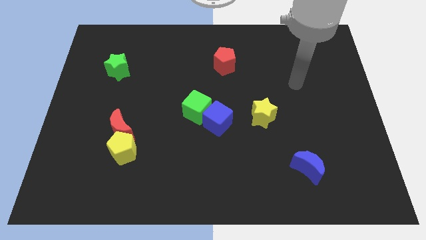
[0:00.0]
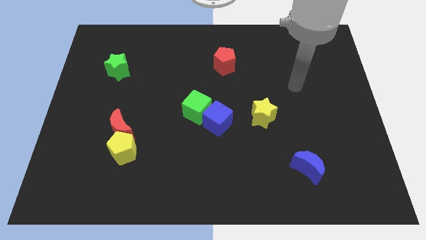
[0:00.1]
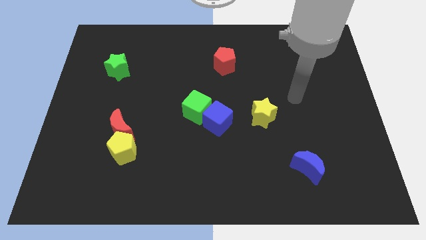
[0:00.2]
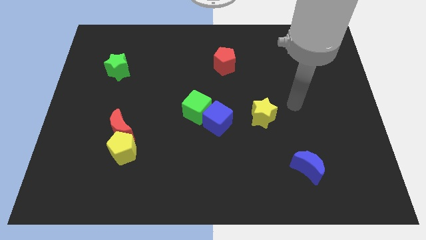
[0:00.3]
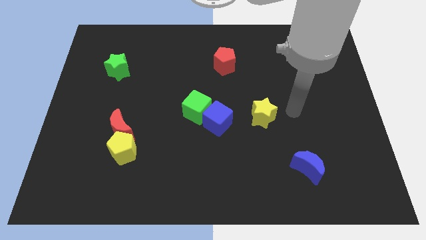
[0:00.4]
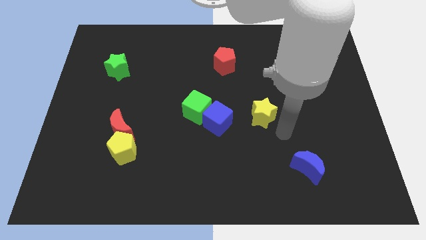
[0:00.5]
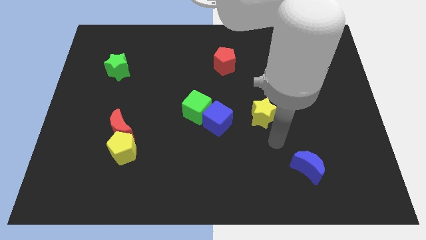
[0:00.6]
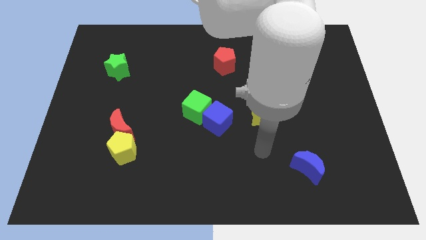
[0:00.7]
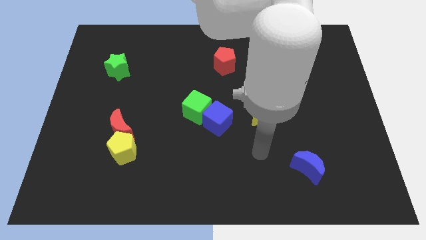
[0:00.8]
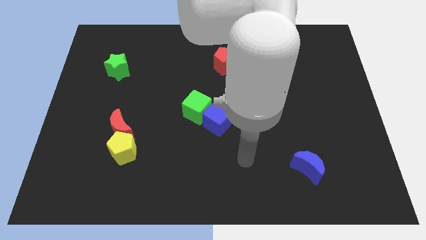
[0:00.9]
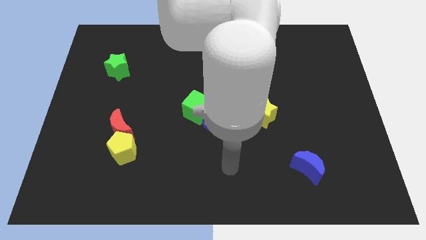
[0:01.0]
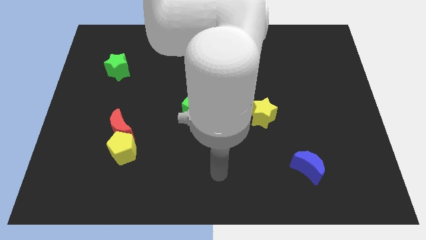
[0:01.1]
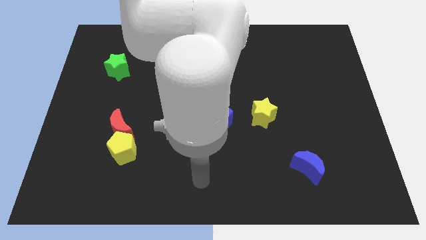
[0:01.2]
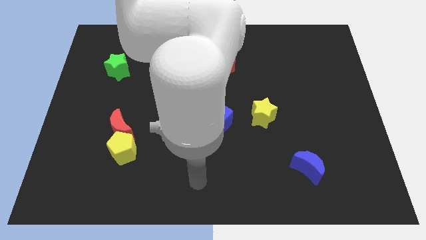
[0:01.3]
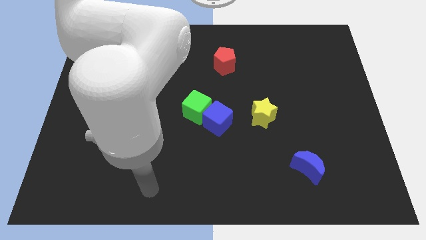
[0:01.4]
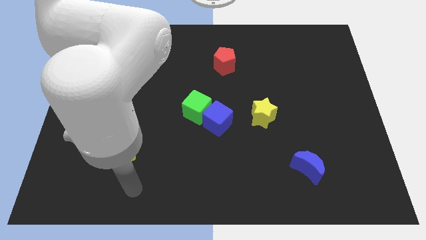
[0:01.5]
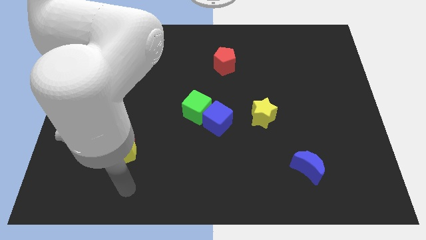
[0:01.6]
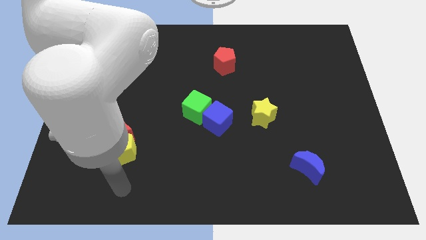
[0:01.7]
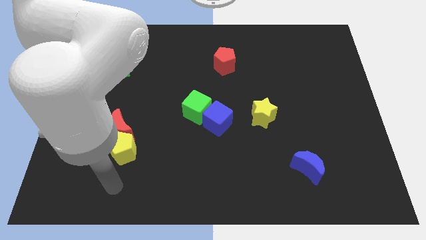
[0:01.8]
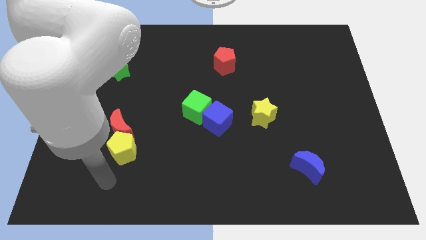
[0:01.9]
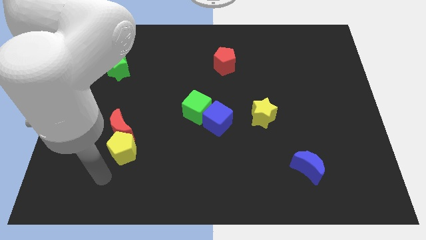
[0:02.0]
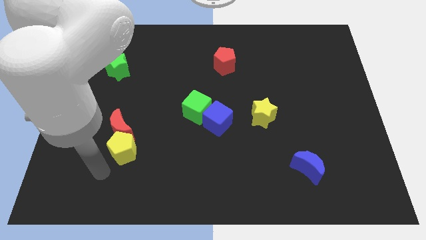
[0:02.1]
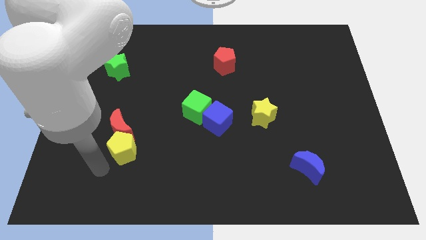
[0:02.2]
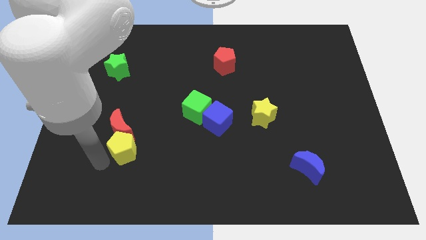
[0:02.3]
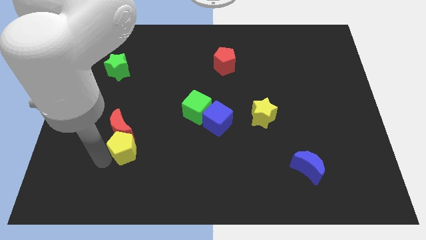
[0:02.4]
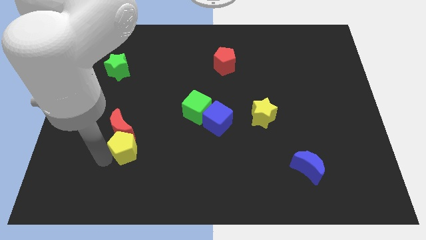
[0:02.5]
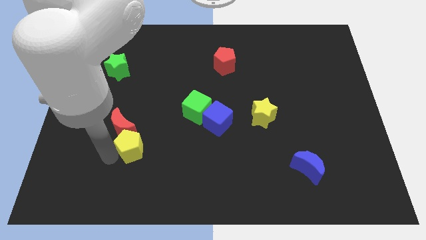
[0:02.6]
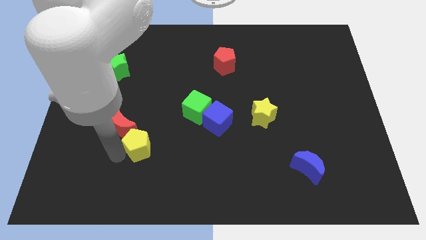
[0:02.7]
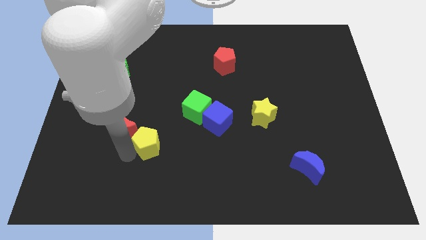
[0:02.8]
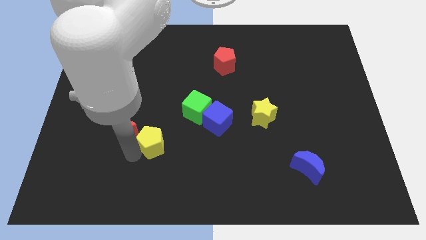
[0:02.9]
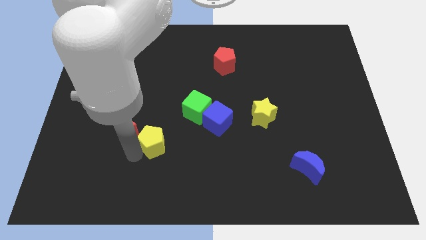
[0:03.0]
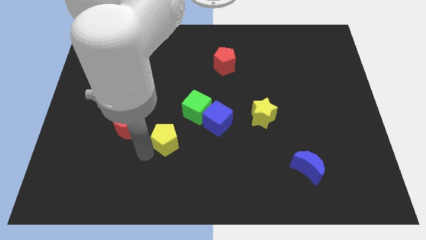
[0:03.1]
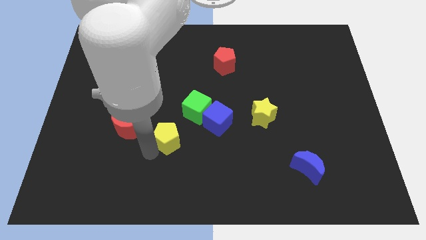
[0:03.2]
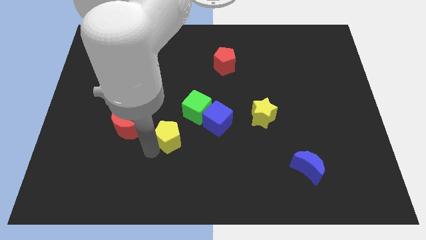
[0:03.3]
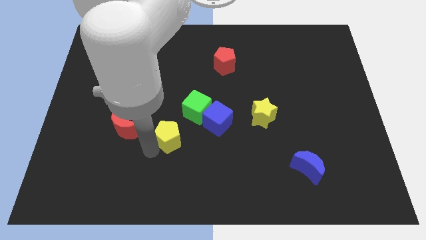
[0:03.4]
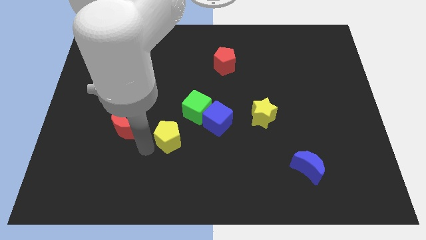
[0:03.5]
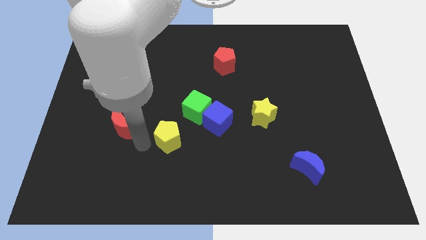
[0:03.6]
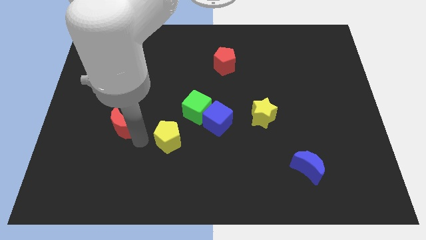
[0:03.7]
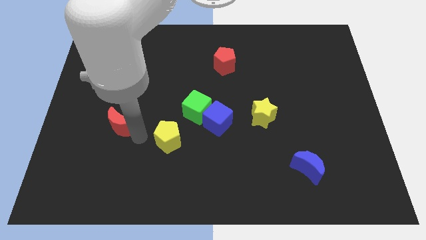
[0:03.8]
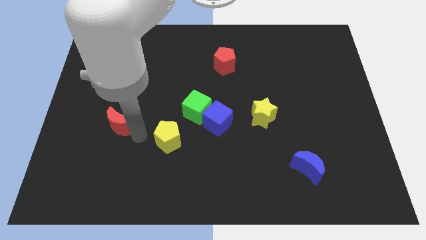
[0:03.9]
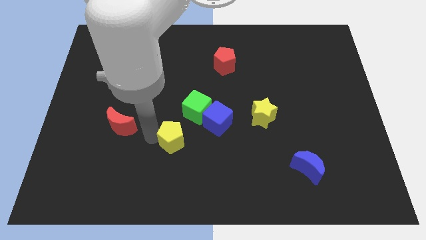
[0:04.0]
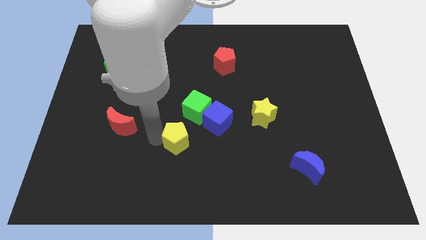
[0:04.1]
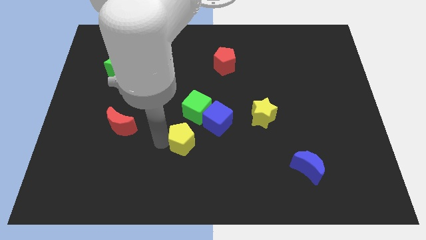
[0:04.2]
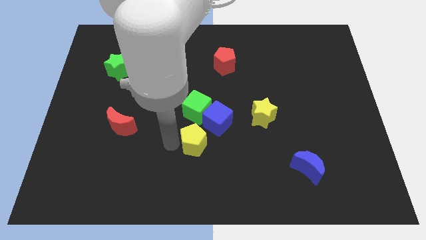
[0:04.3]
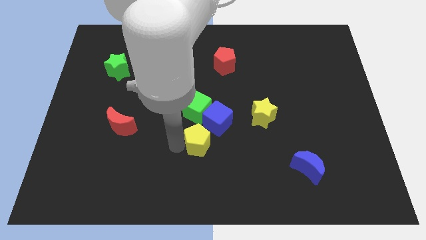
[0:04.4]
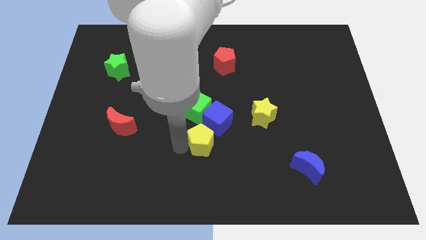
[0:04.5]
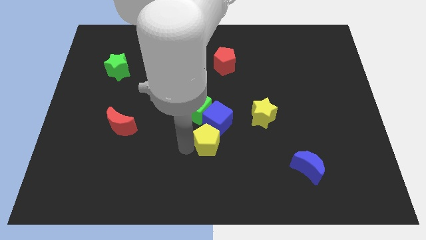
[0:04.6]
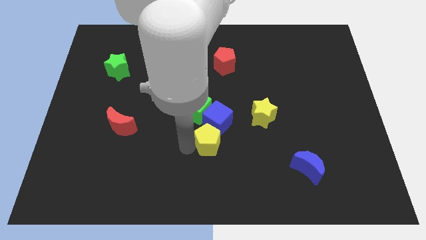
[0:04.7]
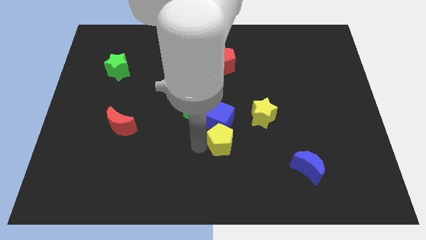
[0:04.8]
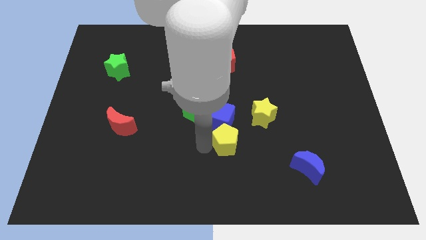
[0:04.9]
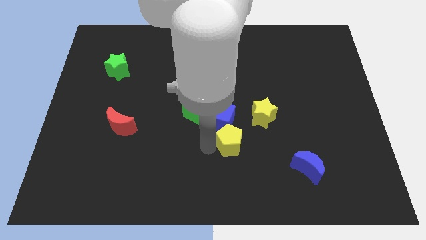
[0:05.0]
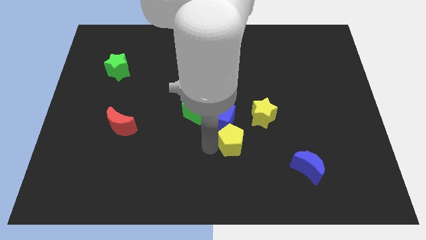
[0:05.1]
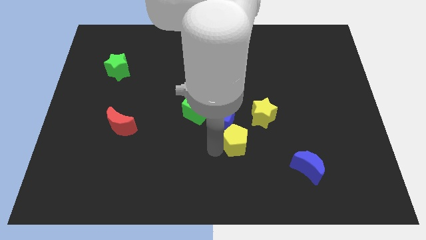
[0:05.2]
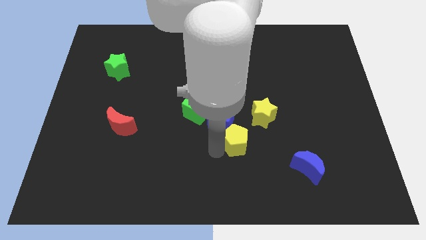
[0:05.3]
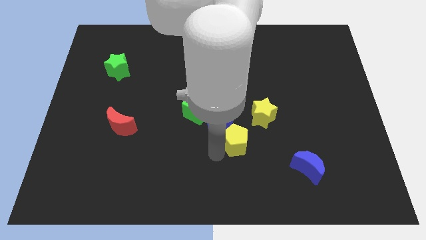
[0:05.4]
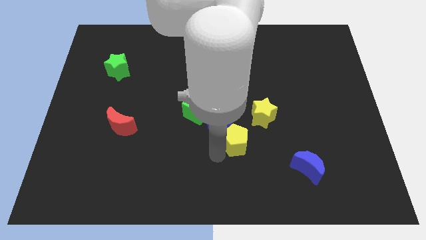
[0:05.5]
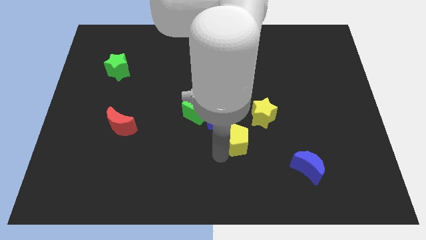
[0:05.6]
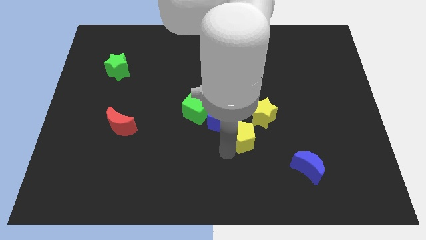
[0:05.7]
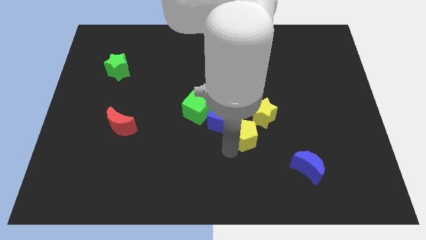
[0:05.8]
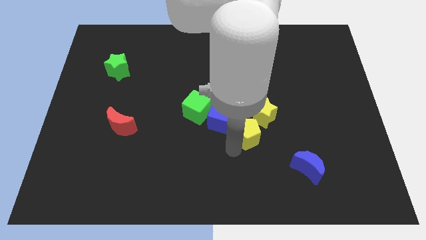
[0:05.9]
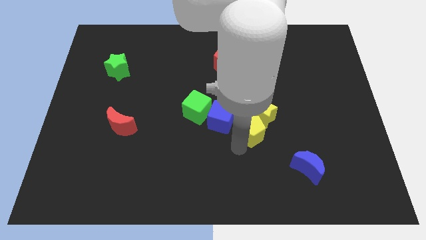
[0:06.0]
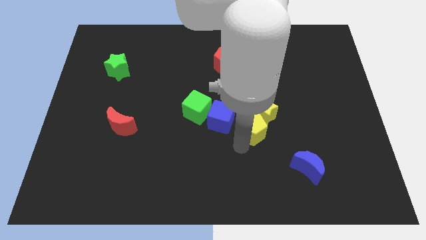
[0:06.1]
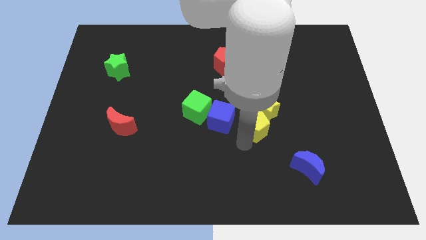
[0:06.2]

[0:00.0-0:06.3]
push the yellow pentagon next to the yellow star

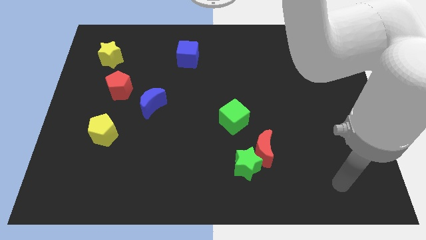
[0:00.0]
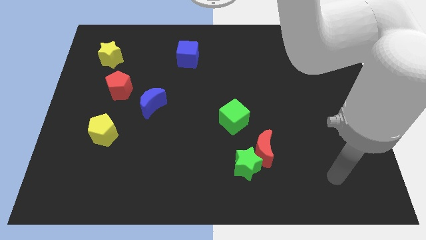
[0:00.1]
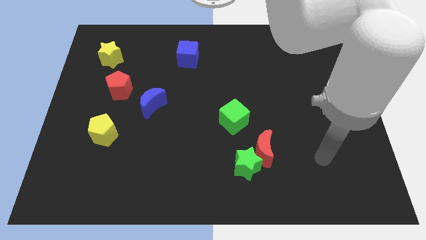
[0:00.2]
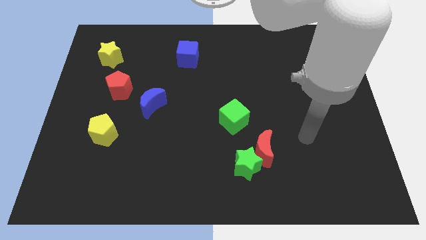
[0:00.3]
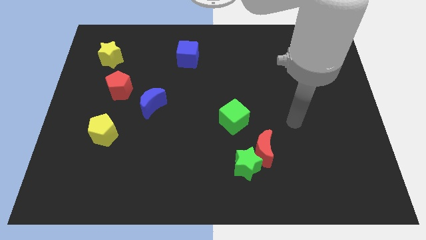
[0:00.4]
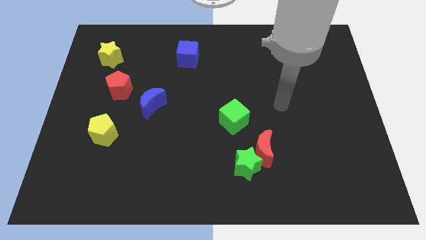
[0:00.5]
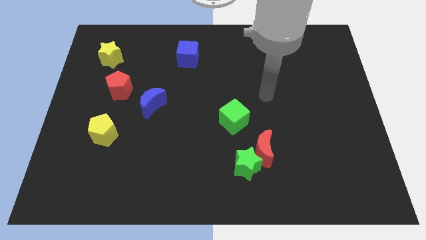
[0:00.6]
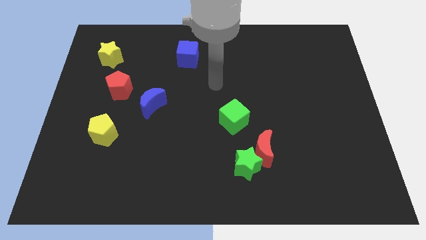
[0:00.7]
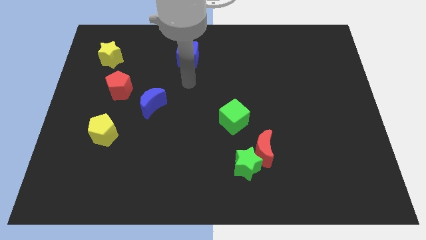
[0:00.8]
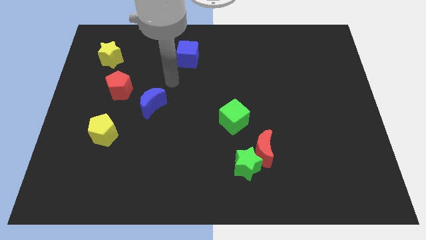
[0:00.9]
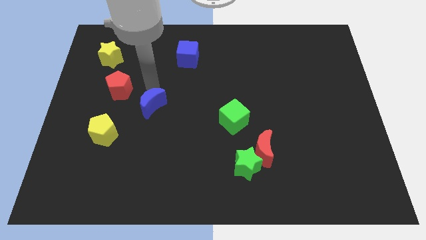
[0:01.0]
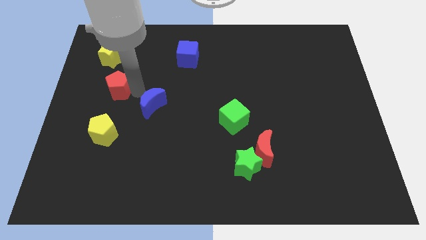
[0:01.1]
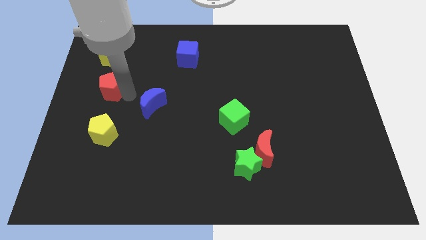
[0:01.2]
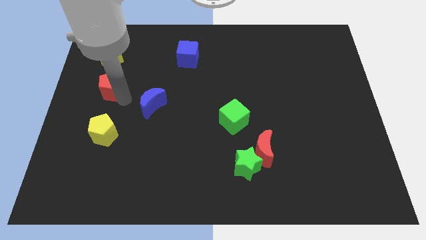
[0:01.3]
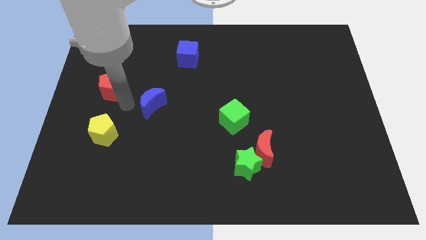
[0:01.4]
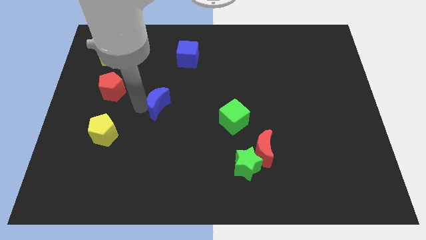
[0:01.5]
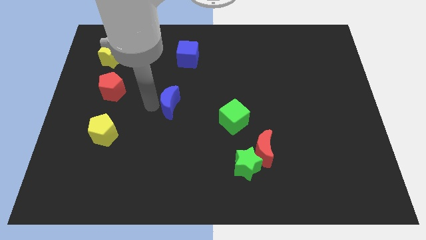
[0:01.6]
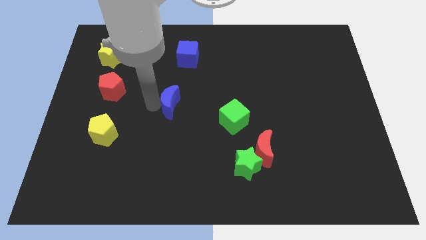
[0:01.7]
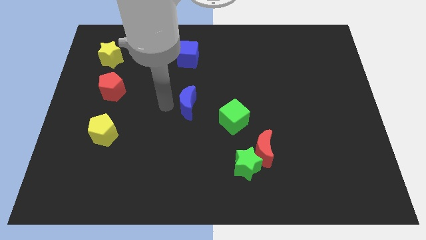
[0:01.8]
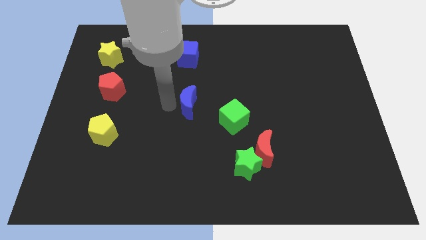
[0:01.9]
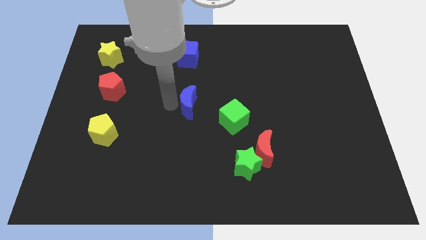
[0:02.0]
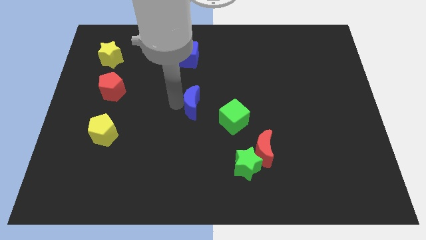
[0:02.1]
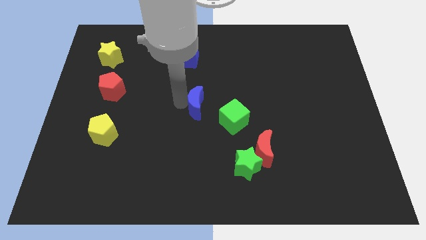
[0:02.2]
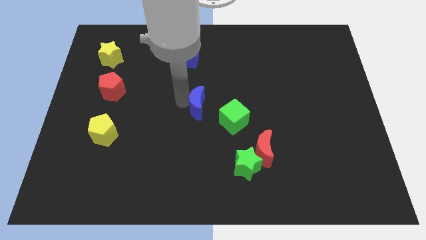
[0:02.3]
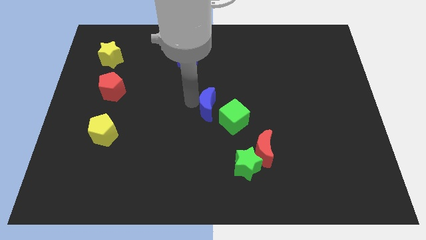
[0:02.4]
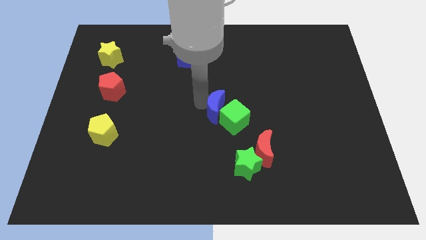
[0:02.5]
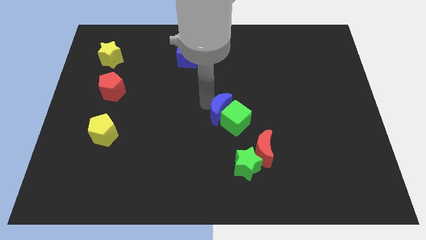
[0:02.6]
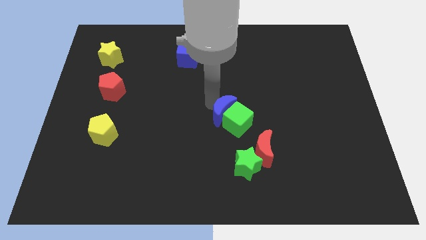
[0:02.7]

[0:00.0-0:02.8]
put the blue moon towards the green cube
